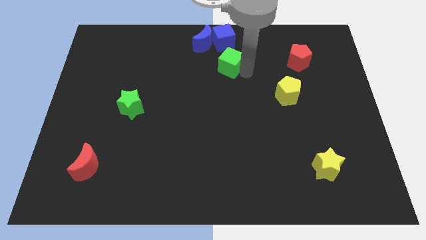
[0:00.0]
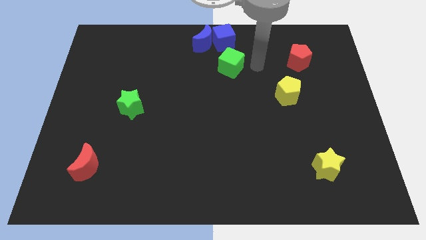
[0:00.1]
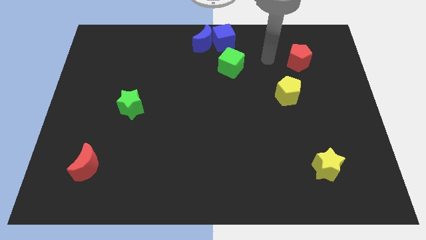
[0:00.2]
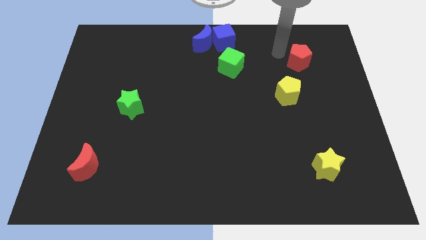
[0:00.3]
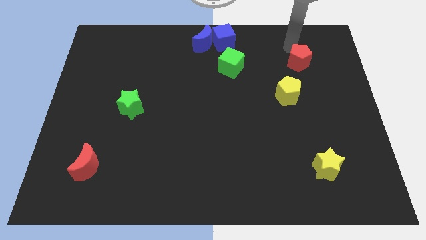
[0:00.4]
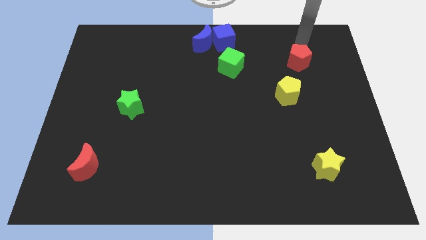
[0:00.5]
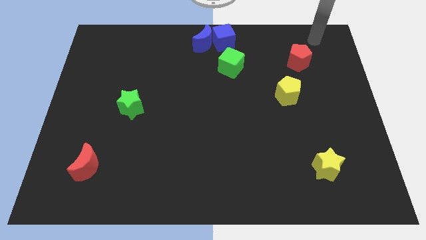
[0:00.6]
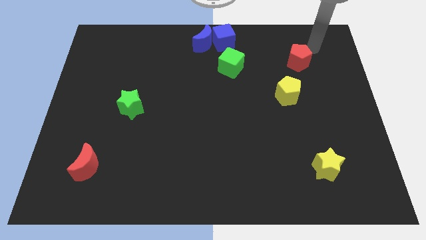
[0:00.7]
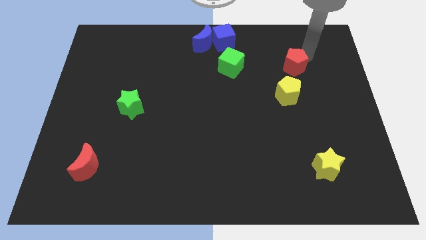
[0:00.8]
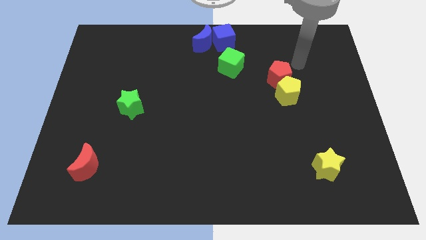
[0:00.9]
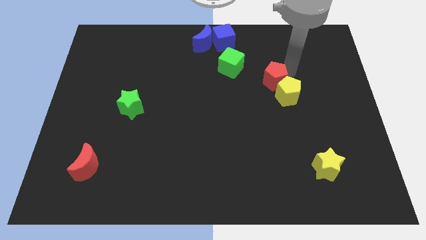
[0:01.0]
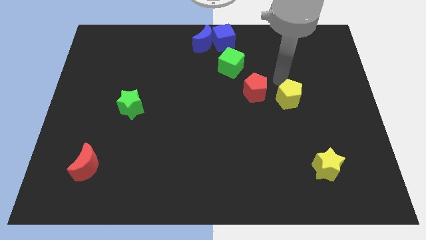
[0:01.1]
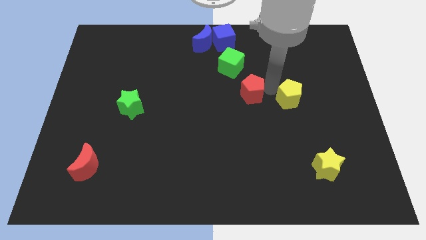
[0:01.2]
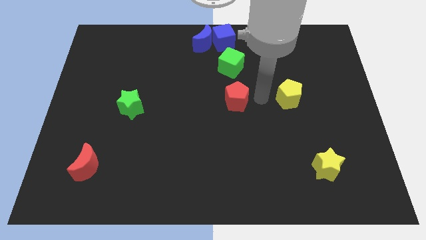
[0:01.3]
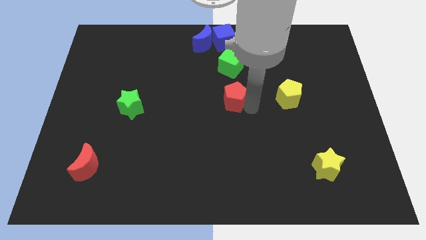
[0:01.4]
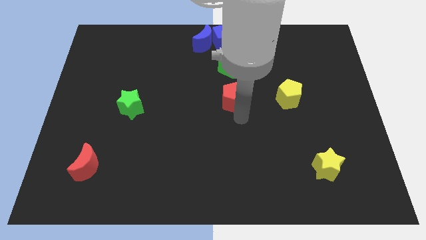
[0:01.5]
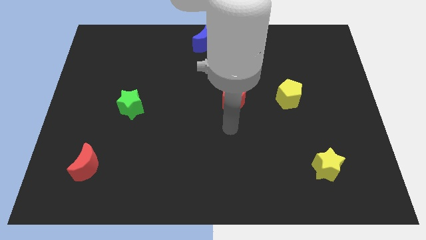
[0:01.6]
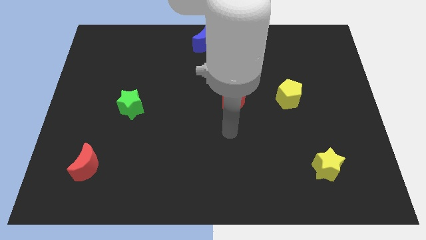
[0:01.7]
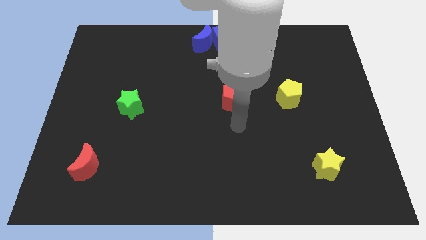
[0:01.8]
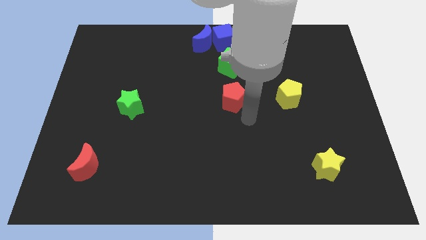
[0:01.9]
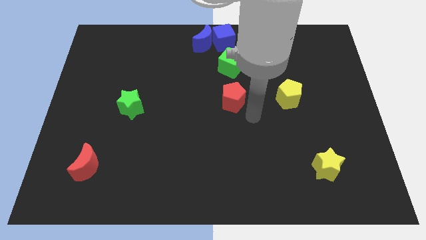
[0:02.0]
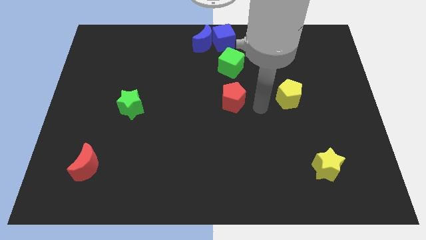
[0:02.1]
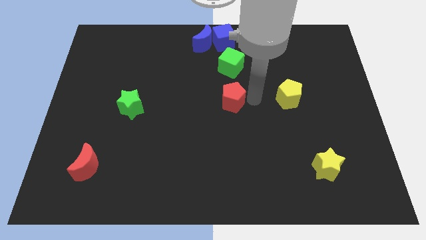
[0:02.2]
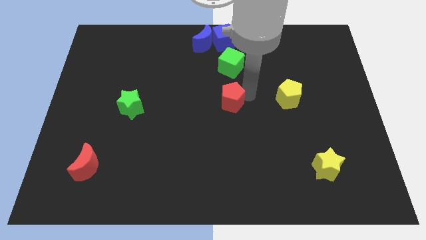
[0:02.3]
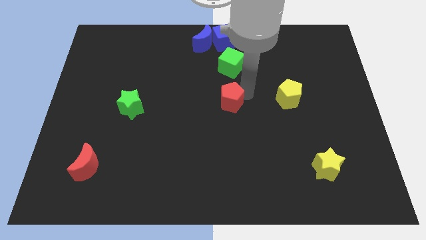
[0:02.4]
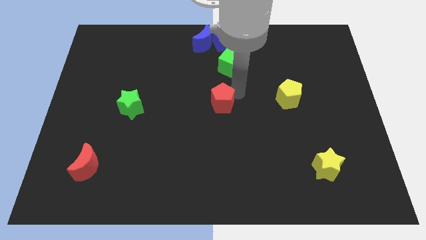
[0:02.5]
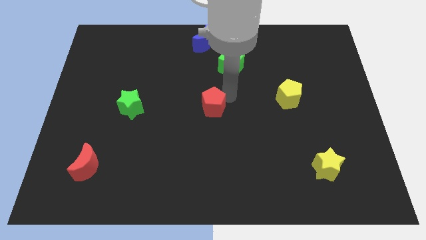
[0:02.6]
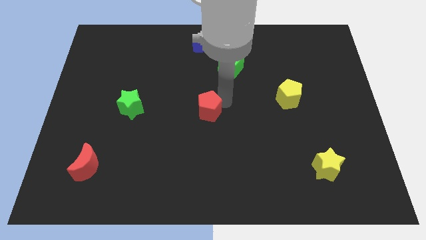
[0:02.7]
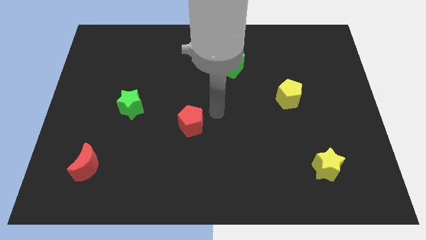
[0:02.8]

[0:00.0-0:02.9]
move the red pentagon to the right of green star

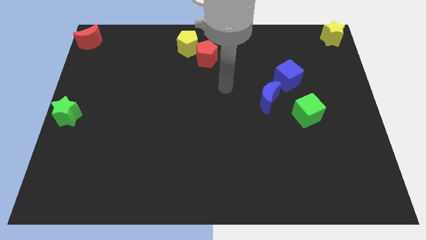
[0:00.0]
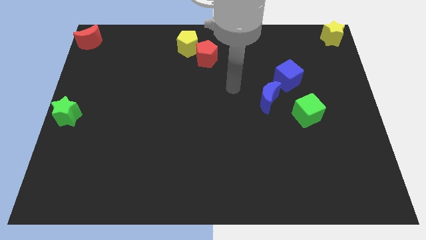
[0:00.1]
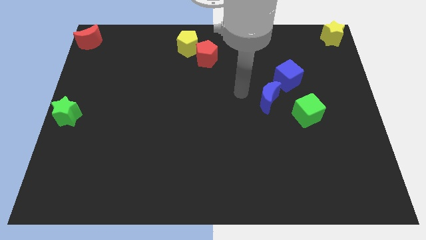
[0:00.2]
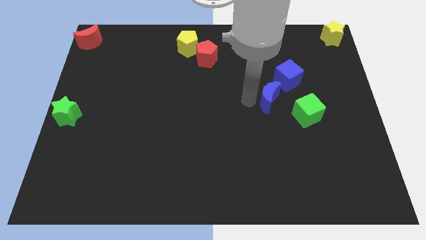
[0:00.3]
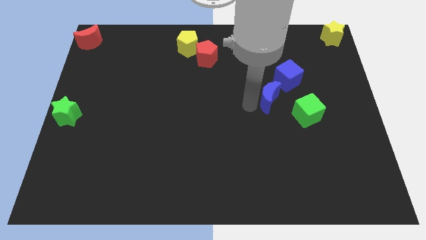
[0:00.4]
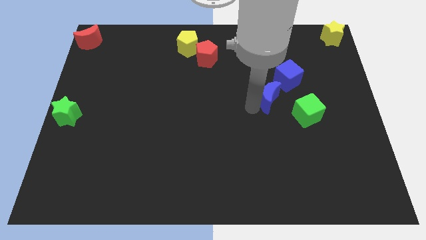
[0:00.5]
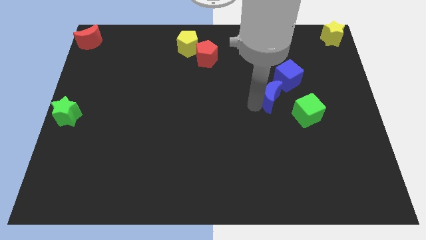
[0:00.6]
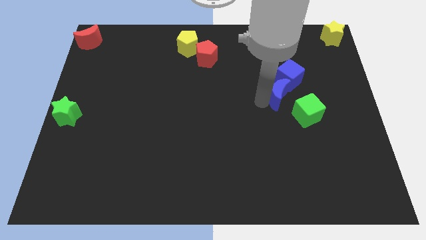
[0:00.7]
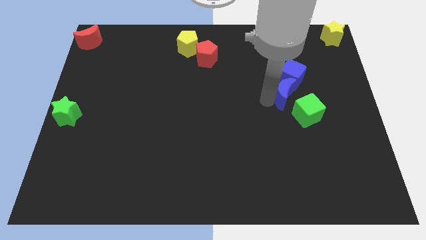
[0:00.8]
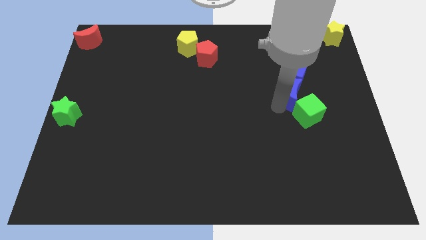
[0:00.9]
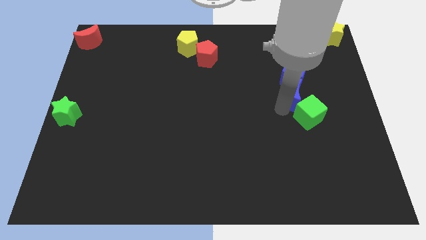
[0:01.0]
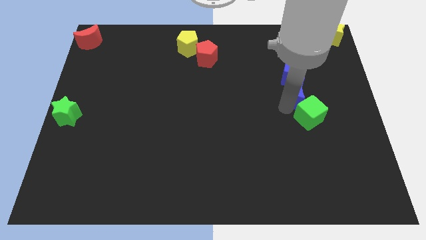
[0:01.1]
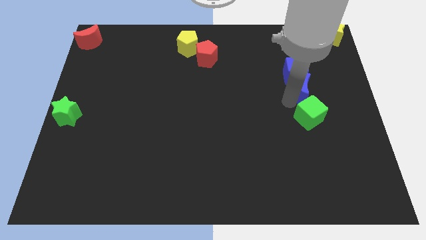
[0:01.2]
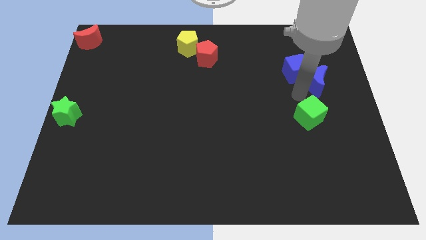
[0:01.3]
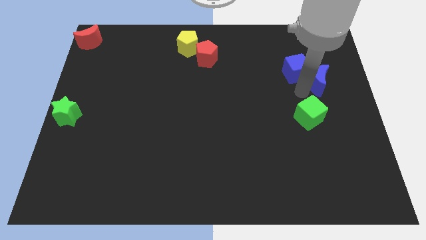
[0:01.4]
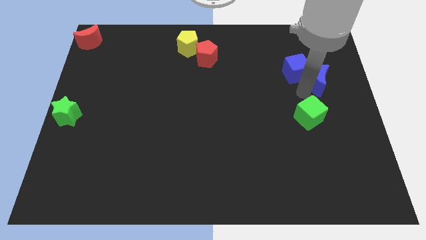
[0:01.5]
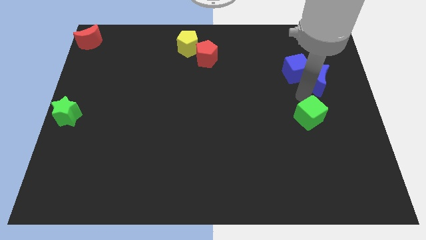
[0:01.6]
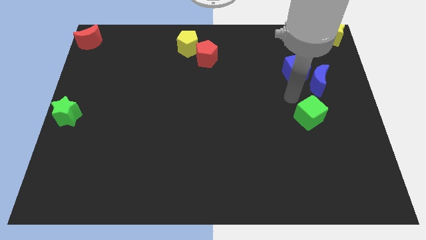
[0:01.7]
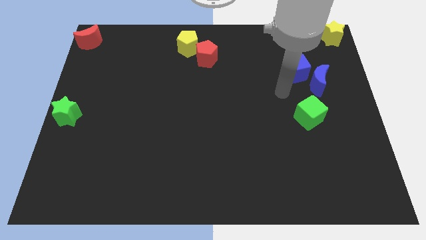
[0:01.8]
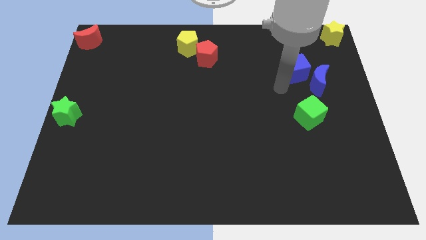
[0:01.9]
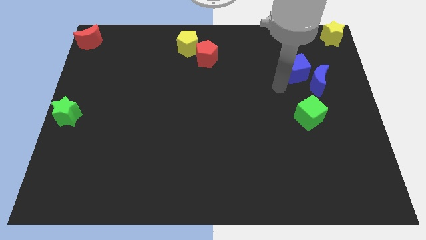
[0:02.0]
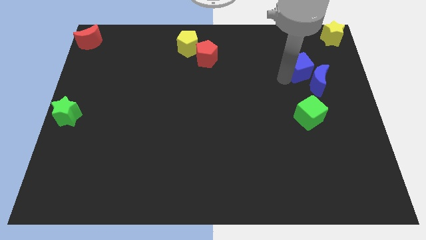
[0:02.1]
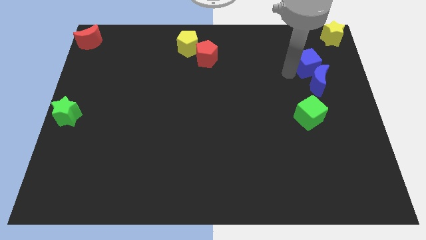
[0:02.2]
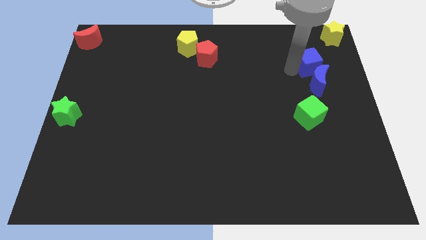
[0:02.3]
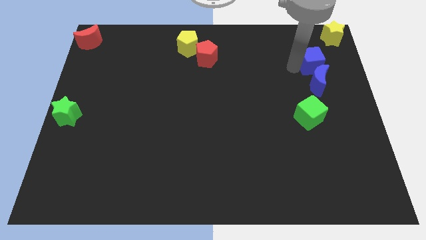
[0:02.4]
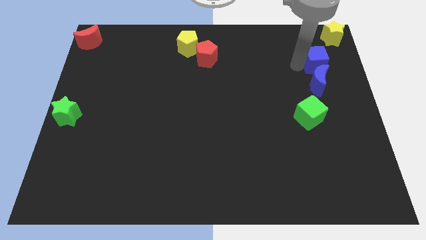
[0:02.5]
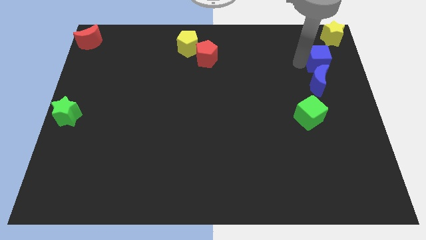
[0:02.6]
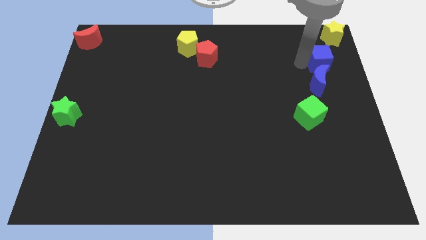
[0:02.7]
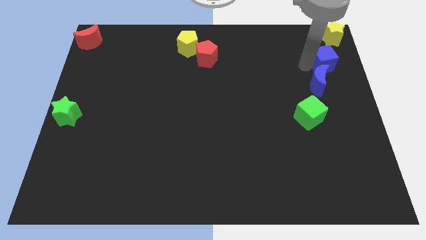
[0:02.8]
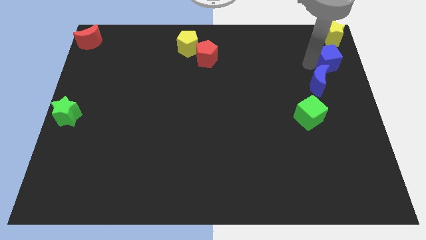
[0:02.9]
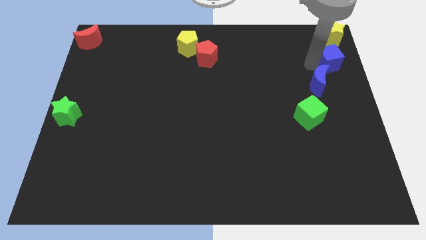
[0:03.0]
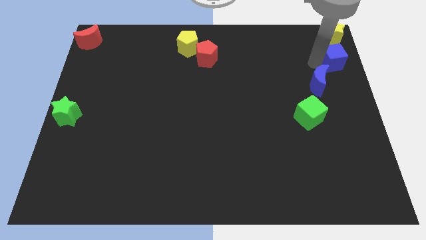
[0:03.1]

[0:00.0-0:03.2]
move the blue cube below the yellow star

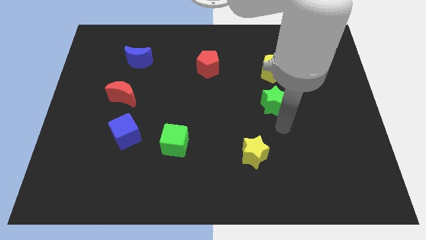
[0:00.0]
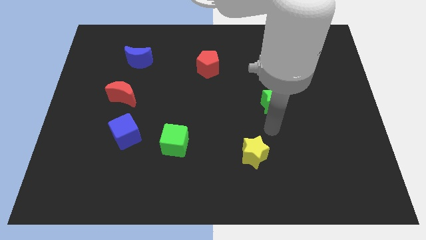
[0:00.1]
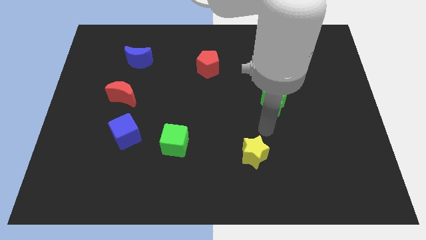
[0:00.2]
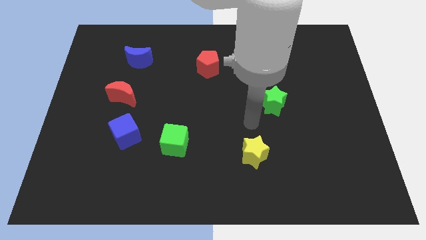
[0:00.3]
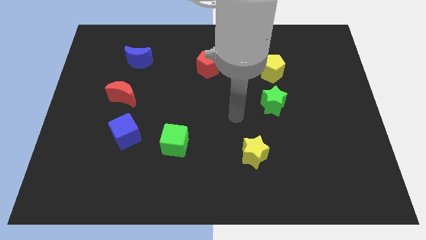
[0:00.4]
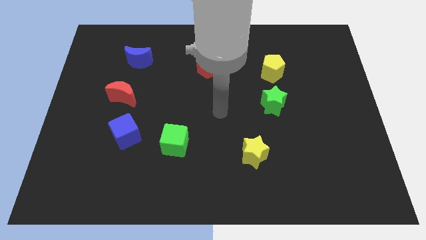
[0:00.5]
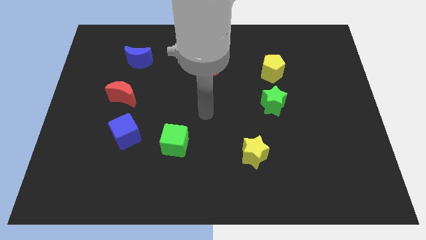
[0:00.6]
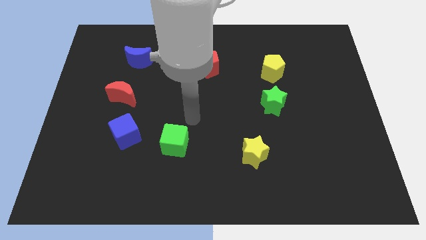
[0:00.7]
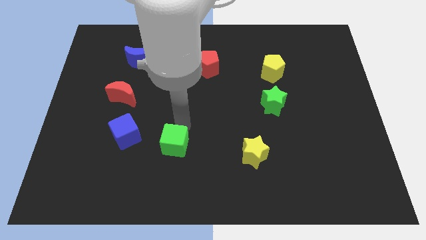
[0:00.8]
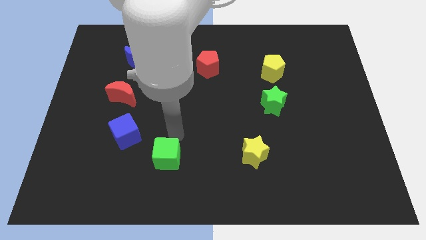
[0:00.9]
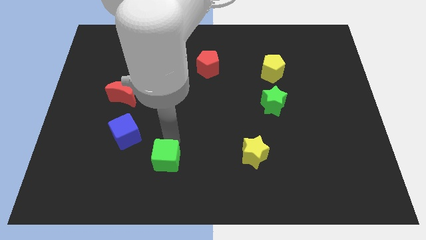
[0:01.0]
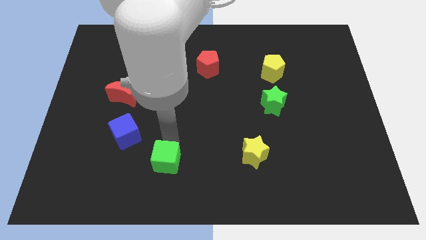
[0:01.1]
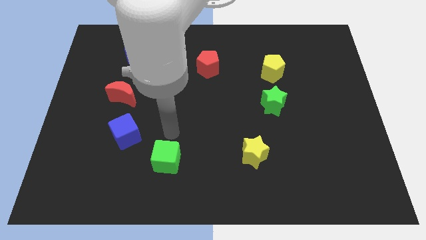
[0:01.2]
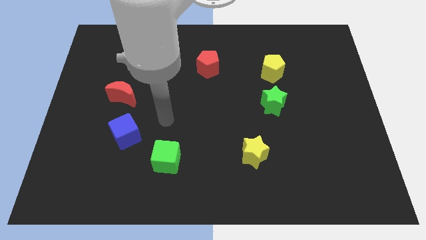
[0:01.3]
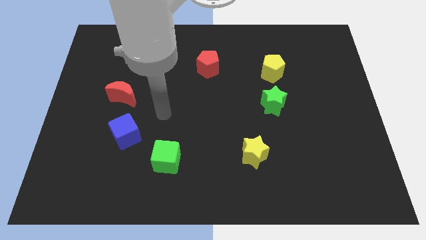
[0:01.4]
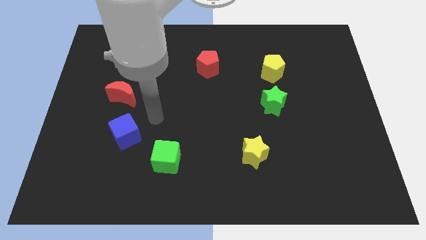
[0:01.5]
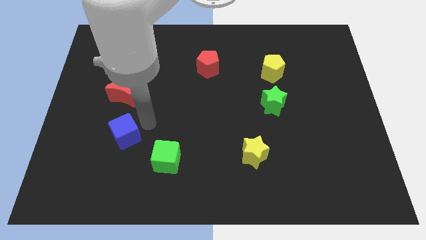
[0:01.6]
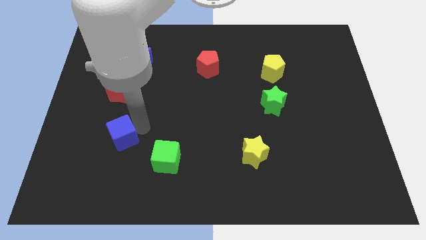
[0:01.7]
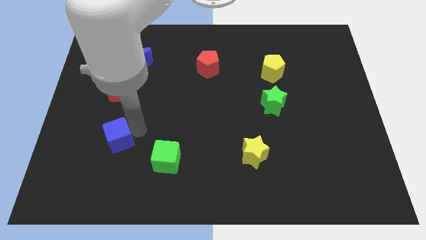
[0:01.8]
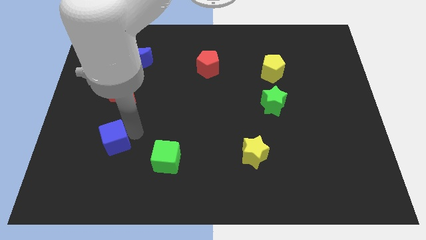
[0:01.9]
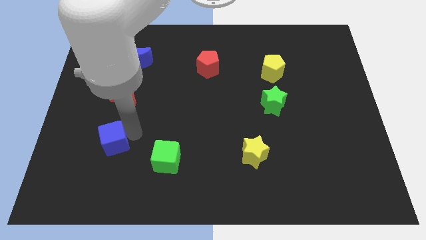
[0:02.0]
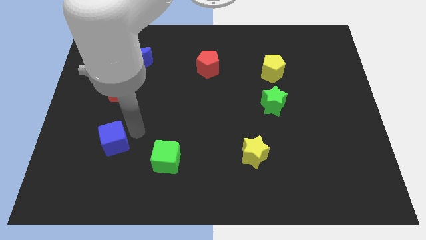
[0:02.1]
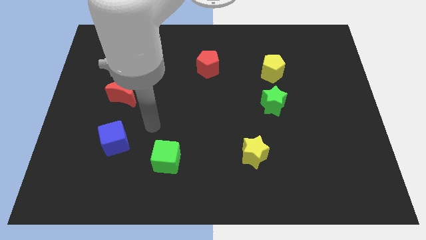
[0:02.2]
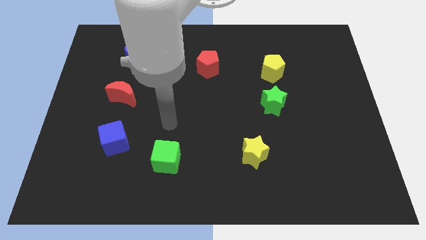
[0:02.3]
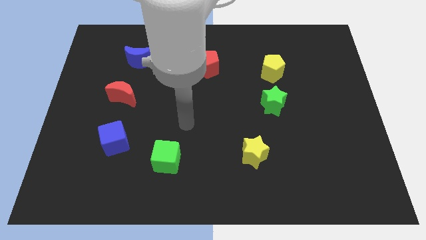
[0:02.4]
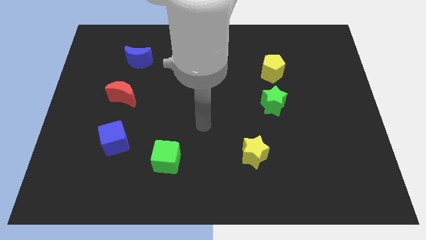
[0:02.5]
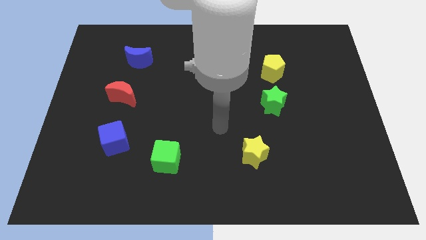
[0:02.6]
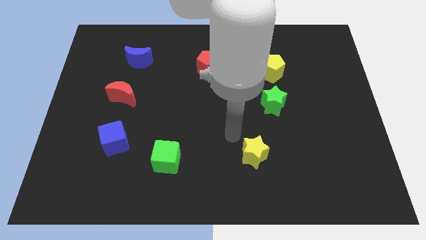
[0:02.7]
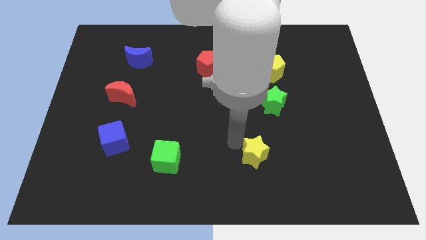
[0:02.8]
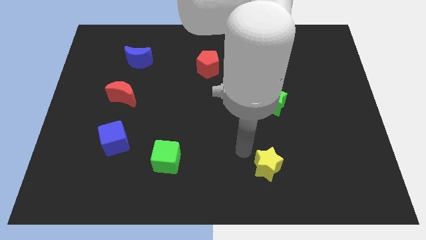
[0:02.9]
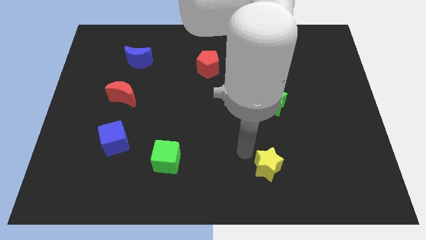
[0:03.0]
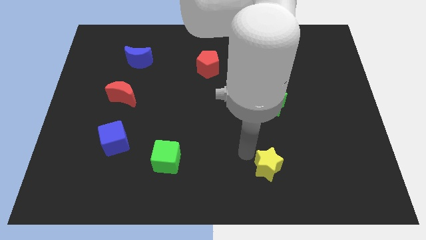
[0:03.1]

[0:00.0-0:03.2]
make a square with all the blocks
